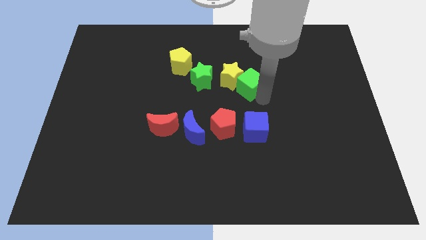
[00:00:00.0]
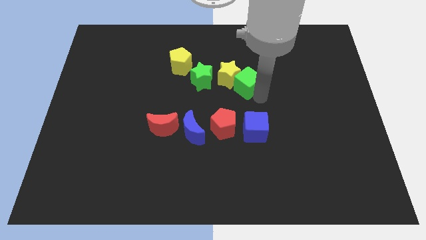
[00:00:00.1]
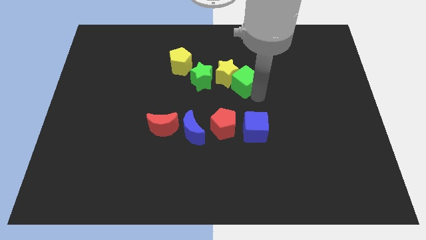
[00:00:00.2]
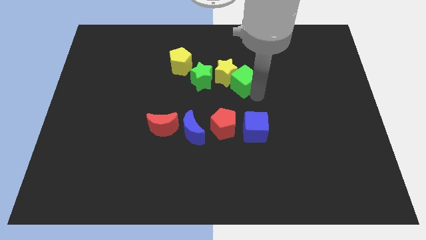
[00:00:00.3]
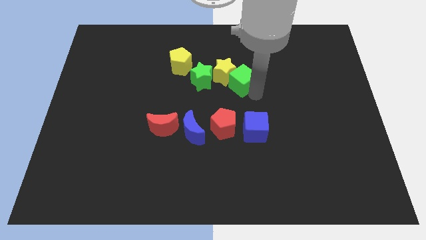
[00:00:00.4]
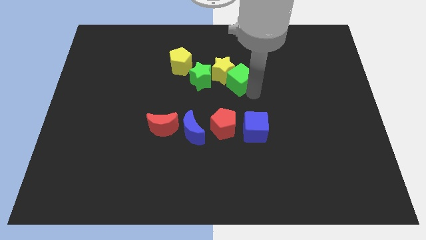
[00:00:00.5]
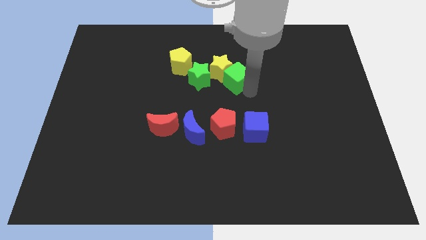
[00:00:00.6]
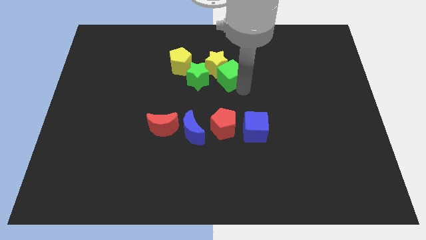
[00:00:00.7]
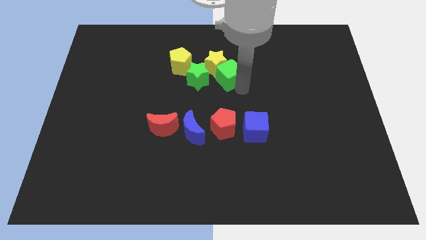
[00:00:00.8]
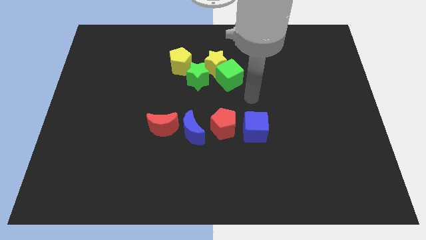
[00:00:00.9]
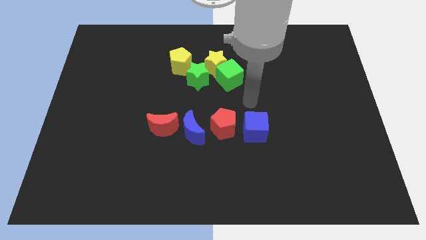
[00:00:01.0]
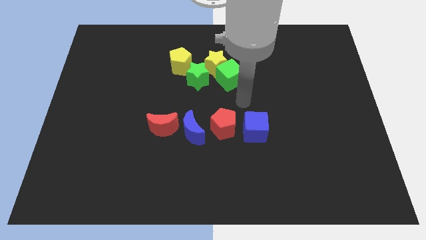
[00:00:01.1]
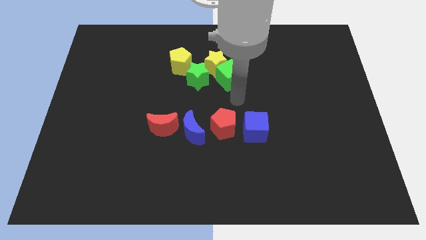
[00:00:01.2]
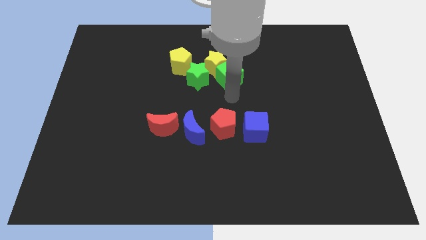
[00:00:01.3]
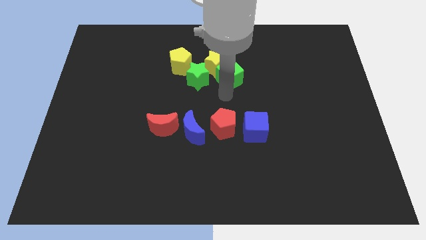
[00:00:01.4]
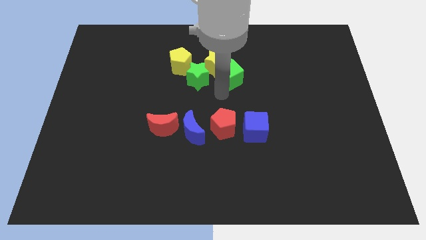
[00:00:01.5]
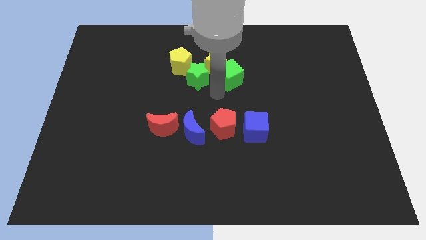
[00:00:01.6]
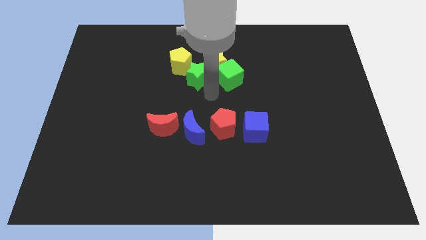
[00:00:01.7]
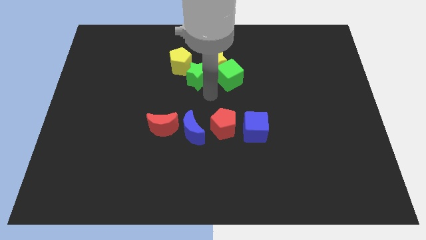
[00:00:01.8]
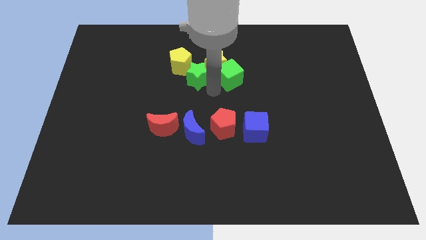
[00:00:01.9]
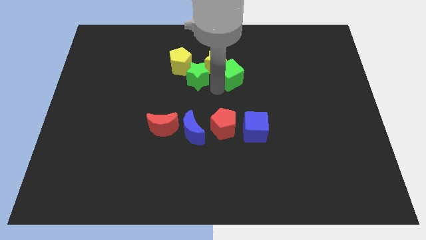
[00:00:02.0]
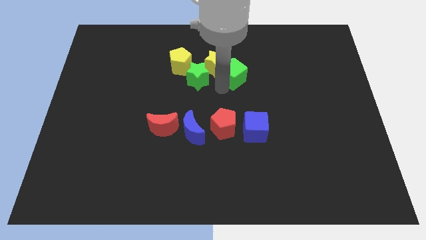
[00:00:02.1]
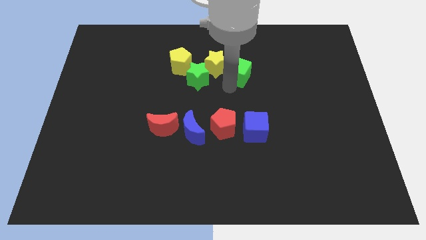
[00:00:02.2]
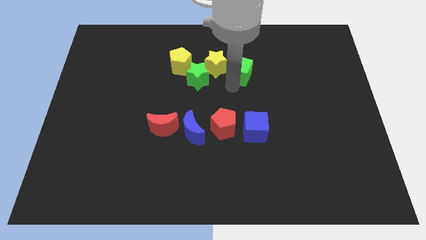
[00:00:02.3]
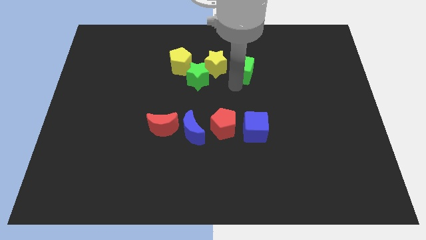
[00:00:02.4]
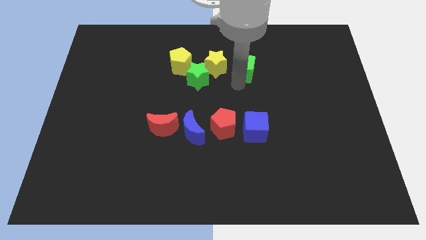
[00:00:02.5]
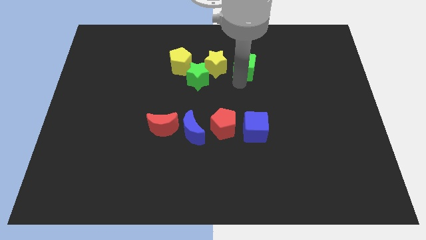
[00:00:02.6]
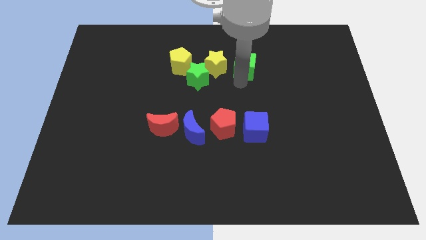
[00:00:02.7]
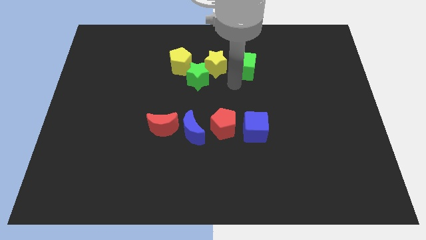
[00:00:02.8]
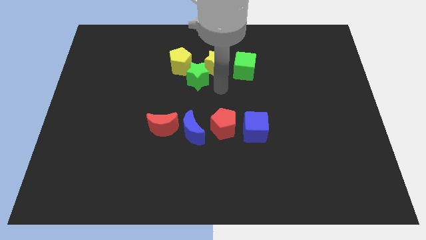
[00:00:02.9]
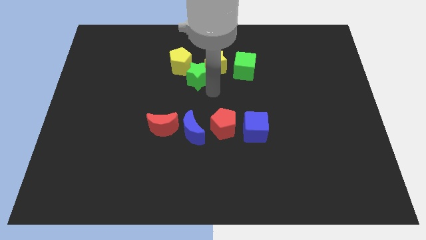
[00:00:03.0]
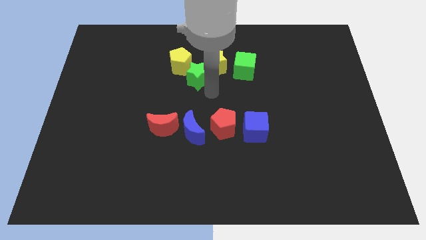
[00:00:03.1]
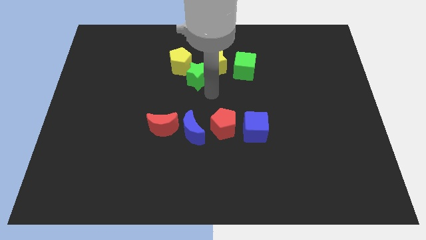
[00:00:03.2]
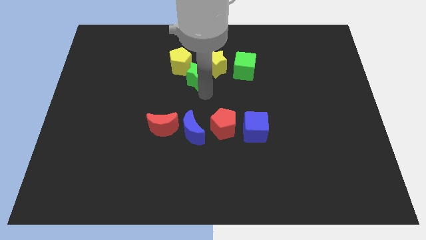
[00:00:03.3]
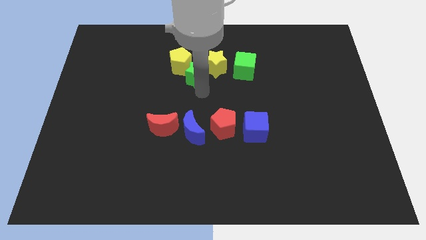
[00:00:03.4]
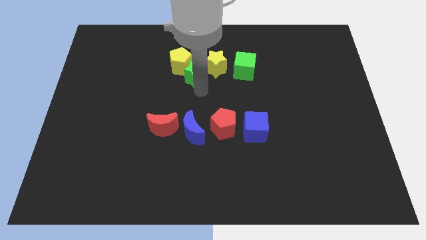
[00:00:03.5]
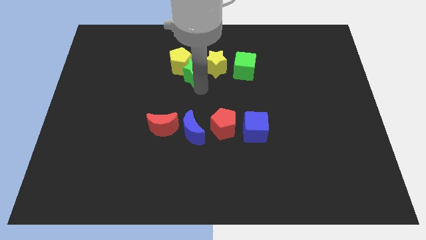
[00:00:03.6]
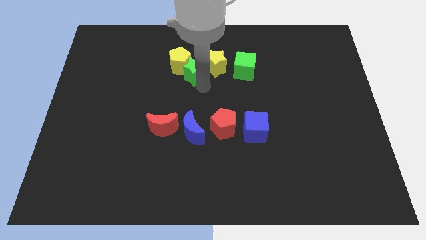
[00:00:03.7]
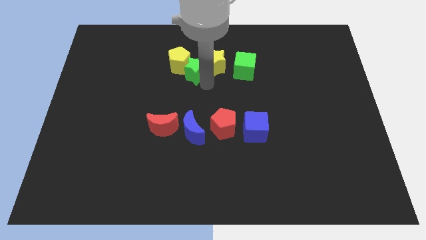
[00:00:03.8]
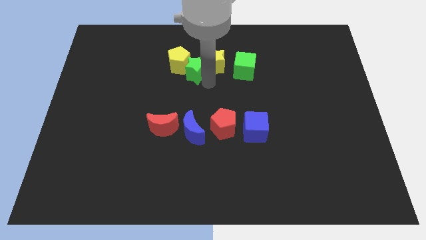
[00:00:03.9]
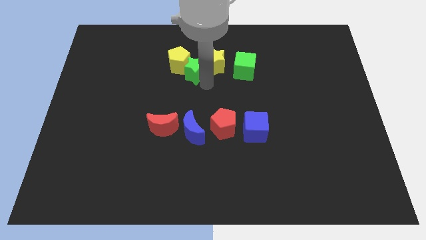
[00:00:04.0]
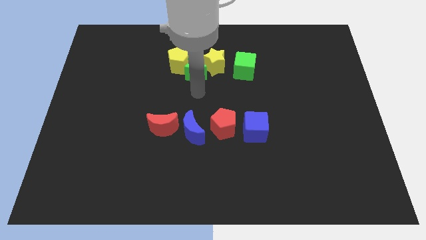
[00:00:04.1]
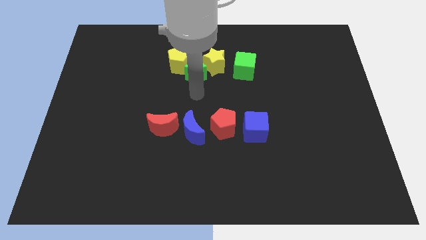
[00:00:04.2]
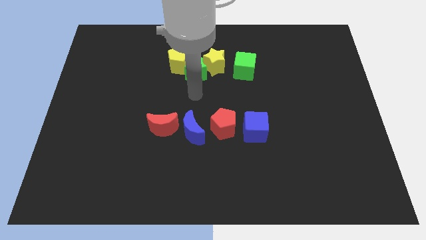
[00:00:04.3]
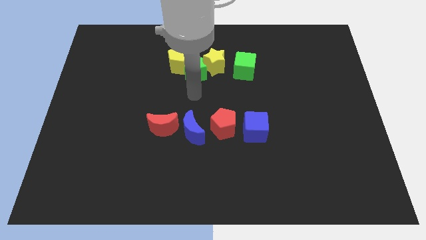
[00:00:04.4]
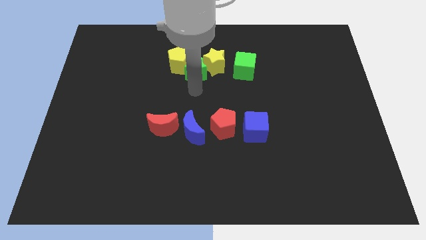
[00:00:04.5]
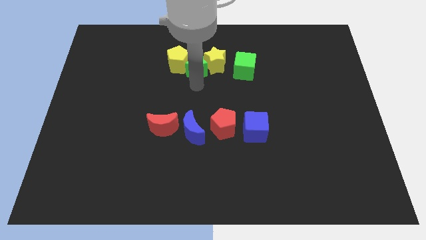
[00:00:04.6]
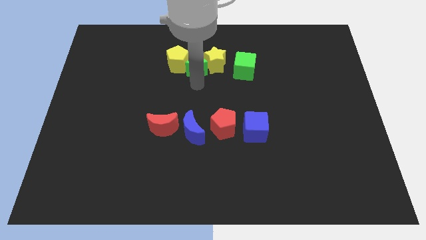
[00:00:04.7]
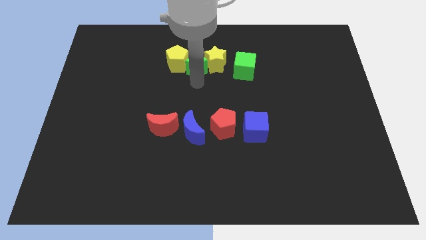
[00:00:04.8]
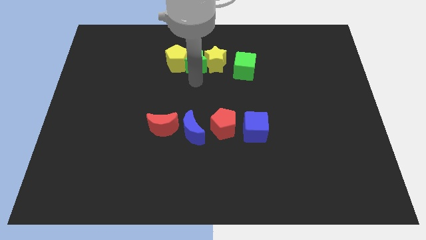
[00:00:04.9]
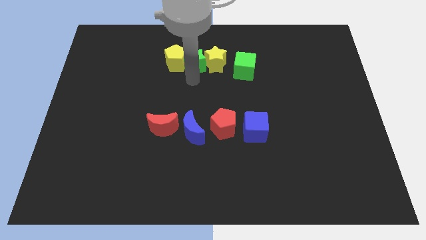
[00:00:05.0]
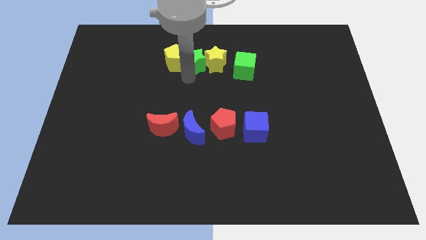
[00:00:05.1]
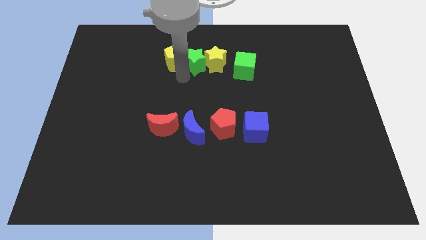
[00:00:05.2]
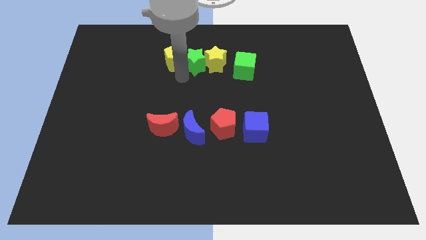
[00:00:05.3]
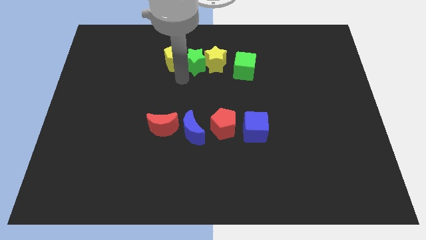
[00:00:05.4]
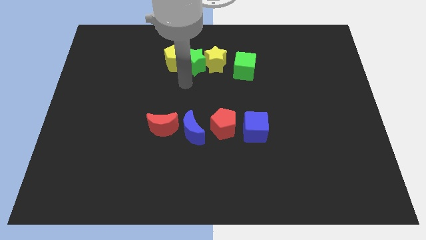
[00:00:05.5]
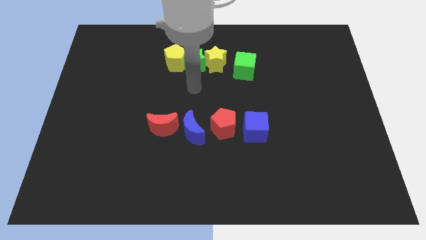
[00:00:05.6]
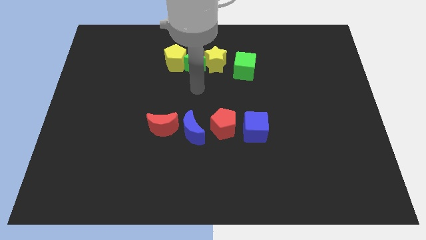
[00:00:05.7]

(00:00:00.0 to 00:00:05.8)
form a row with green star yellow star and green cube

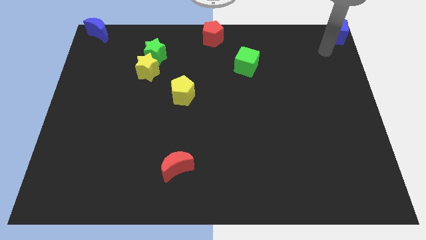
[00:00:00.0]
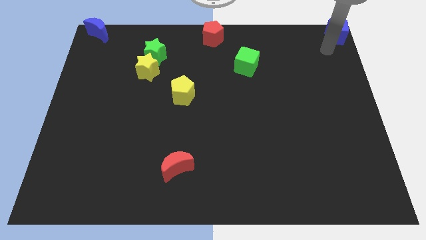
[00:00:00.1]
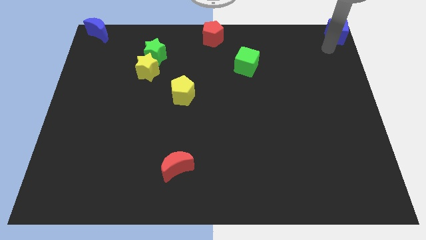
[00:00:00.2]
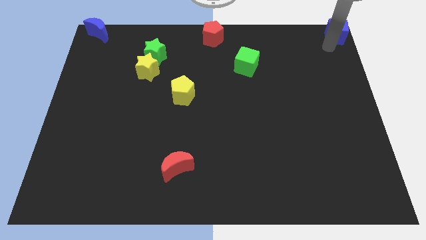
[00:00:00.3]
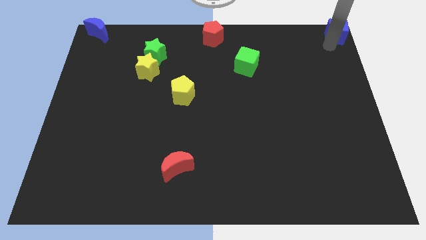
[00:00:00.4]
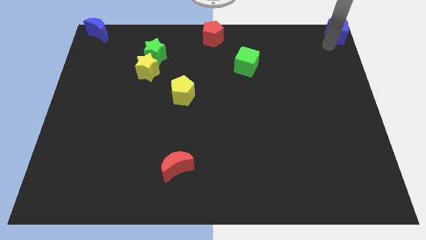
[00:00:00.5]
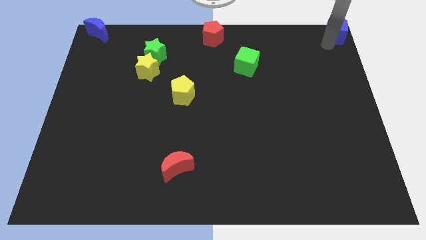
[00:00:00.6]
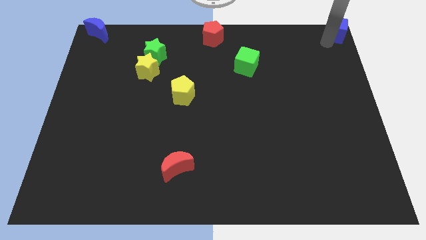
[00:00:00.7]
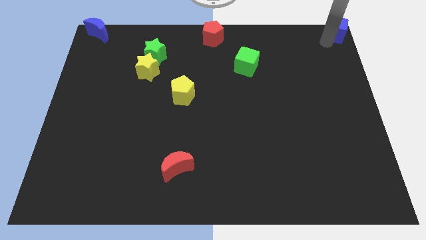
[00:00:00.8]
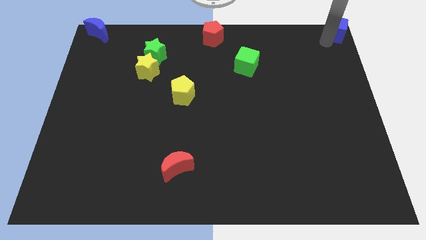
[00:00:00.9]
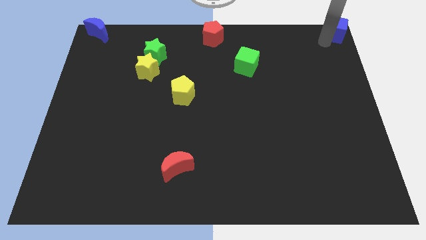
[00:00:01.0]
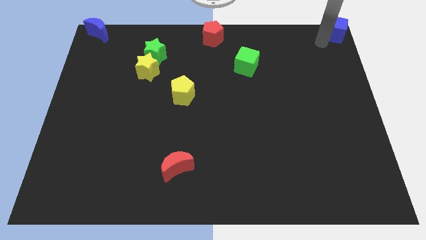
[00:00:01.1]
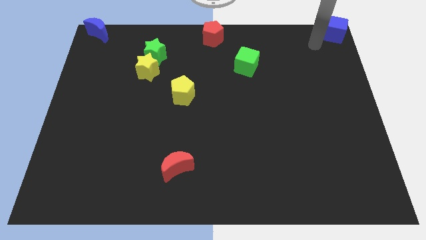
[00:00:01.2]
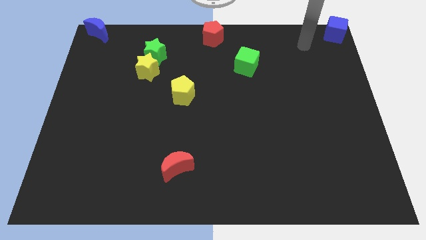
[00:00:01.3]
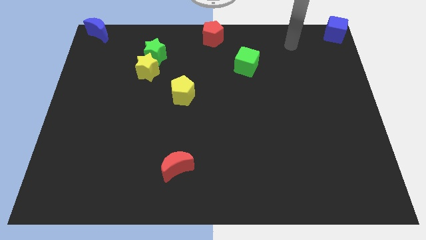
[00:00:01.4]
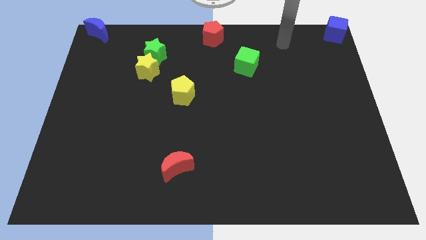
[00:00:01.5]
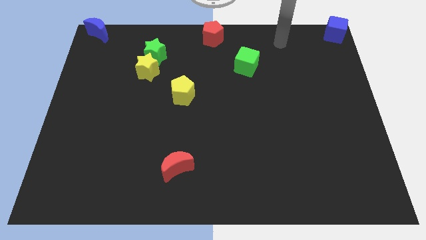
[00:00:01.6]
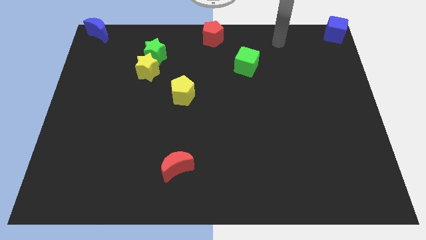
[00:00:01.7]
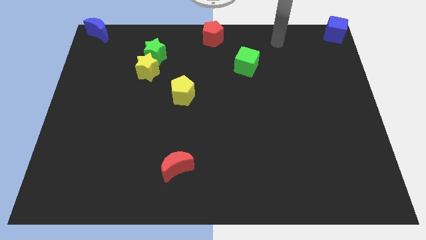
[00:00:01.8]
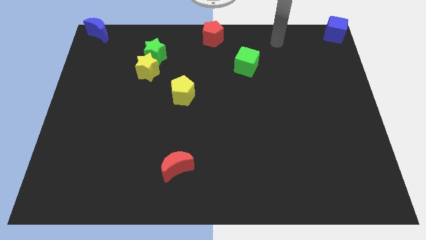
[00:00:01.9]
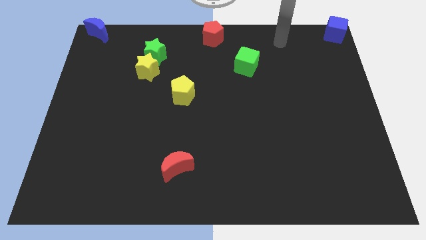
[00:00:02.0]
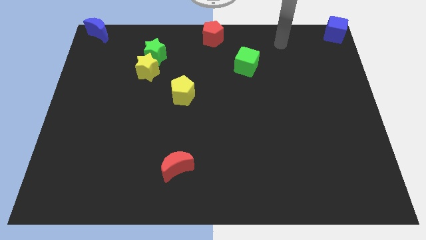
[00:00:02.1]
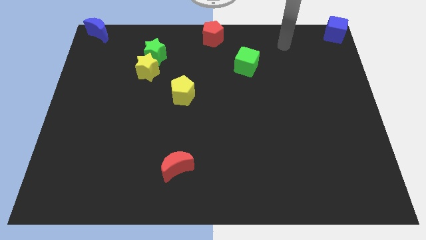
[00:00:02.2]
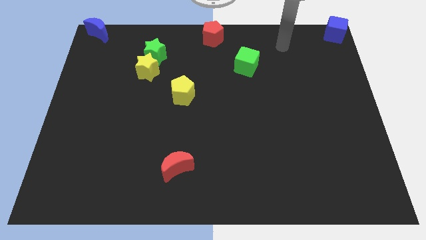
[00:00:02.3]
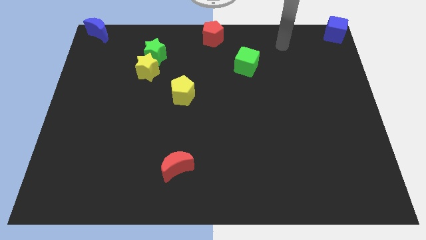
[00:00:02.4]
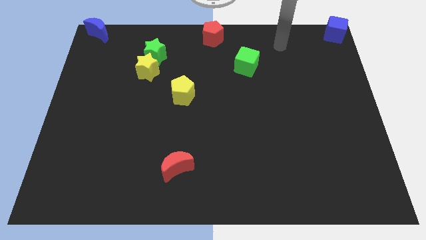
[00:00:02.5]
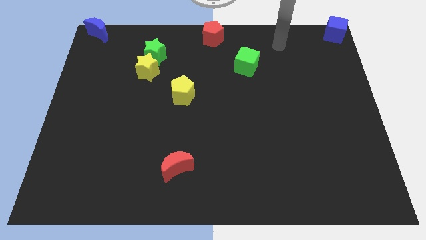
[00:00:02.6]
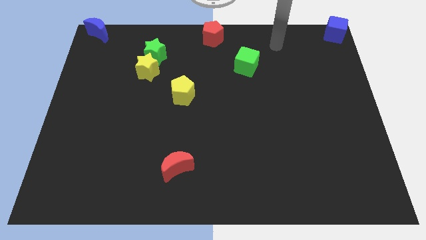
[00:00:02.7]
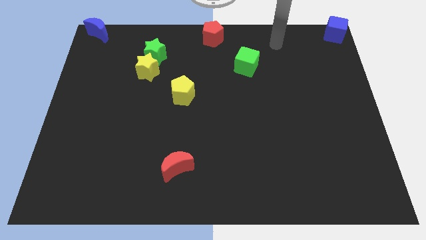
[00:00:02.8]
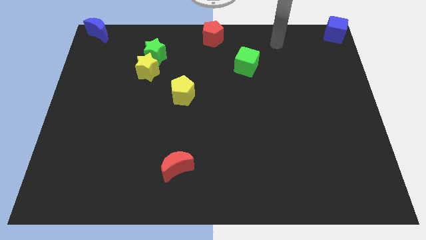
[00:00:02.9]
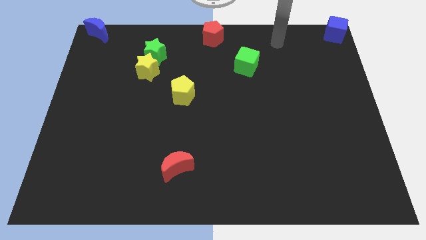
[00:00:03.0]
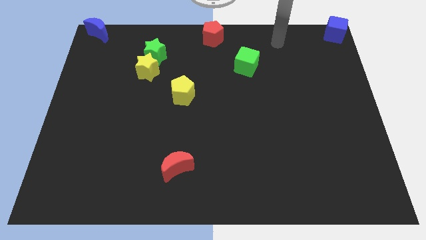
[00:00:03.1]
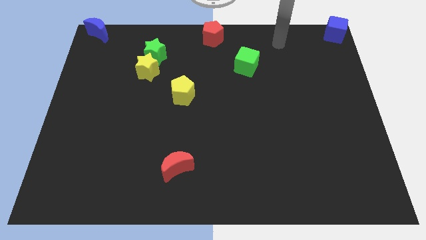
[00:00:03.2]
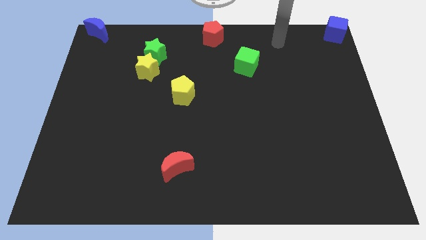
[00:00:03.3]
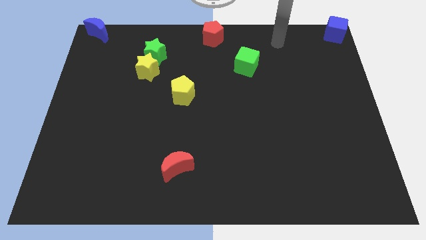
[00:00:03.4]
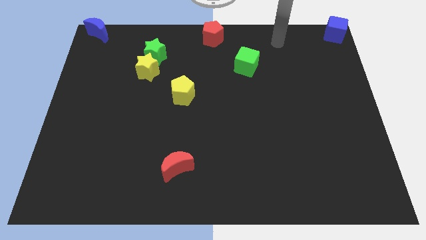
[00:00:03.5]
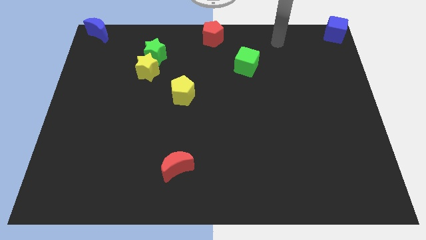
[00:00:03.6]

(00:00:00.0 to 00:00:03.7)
move your arm away from the blue cube
